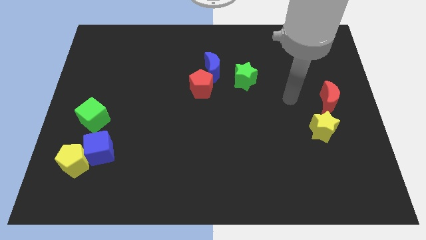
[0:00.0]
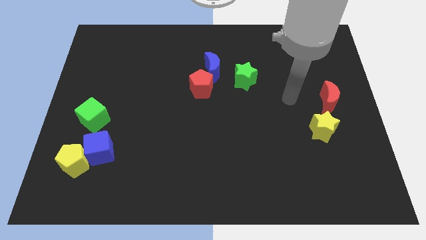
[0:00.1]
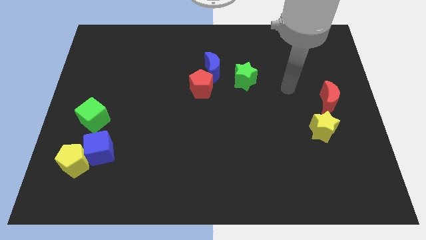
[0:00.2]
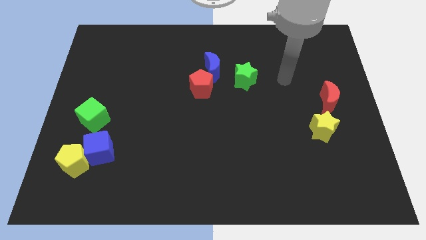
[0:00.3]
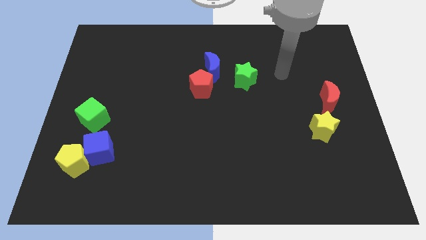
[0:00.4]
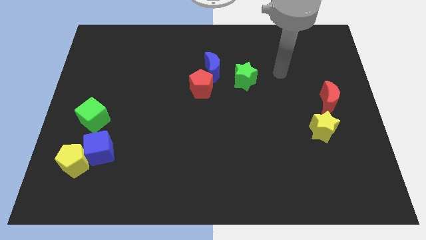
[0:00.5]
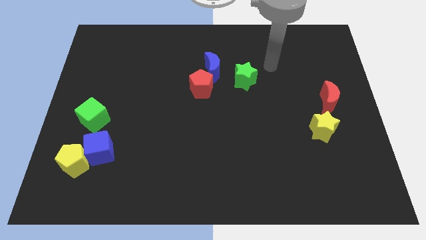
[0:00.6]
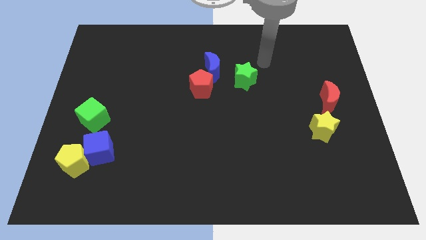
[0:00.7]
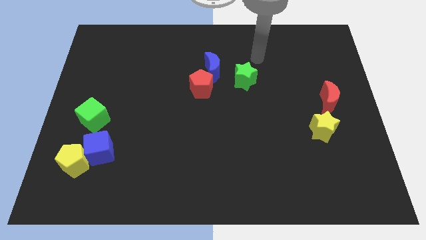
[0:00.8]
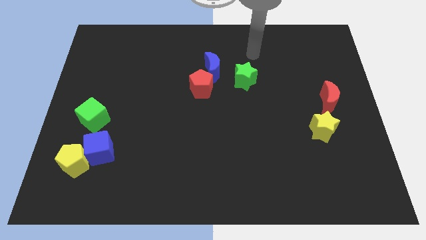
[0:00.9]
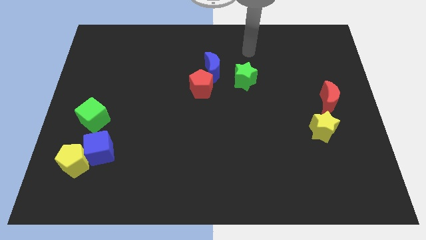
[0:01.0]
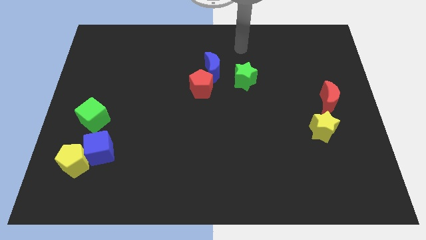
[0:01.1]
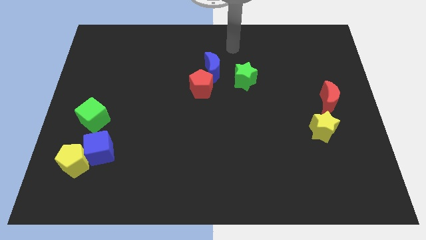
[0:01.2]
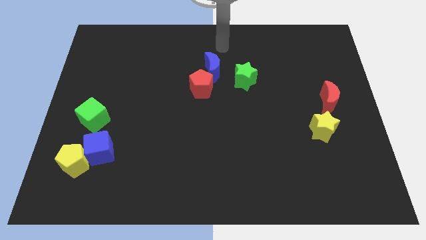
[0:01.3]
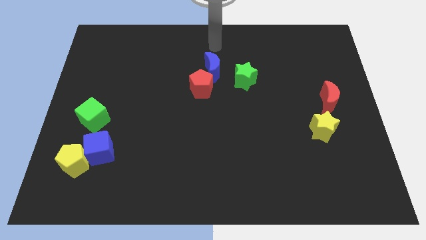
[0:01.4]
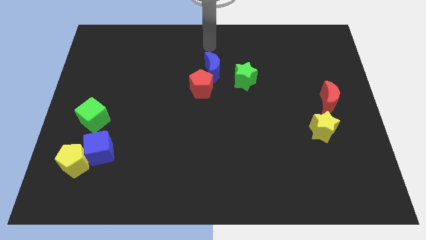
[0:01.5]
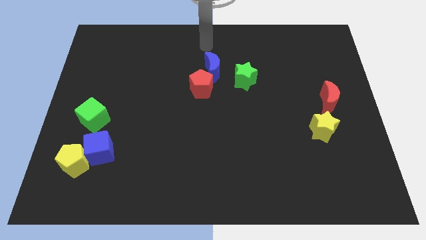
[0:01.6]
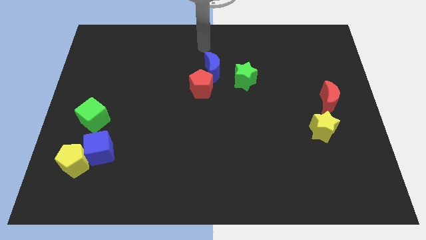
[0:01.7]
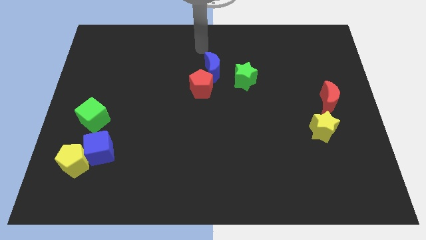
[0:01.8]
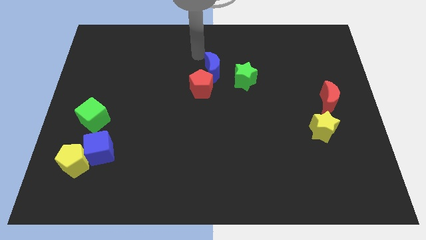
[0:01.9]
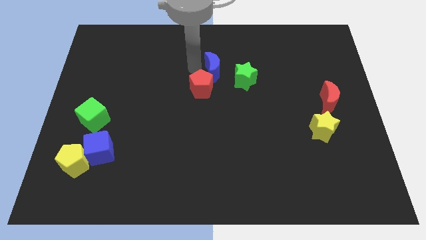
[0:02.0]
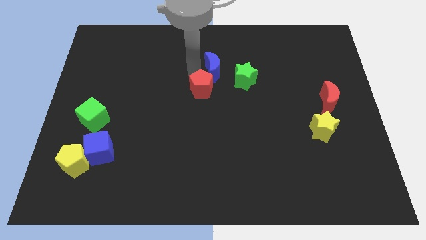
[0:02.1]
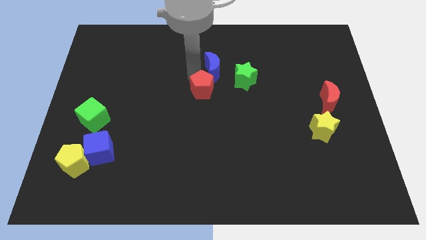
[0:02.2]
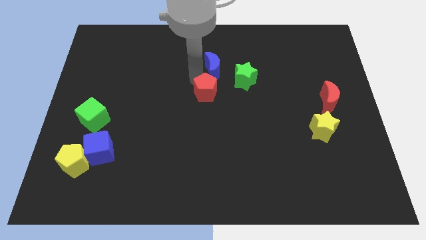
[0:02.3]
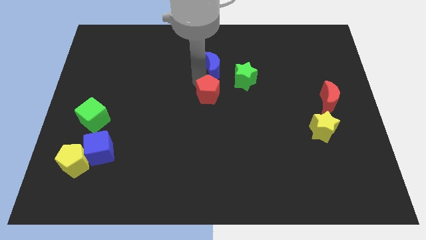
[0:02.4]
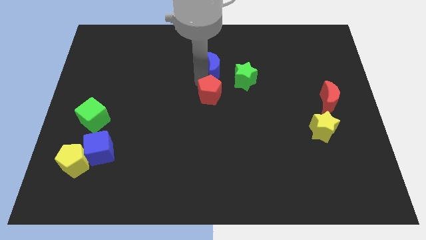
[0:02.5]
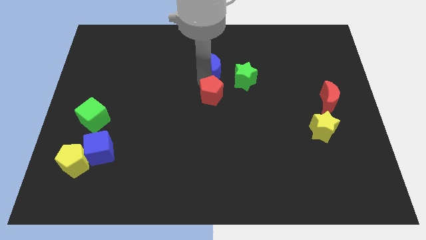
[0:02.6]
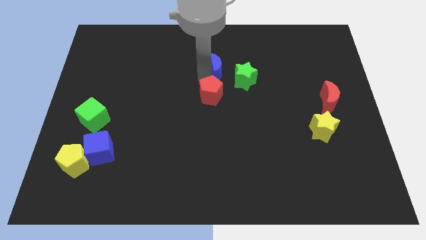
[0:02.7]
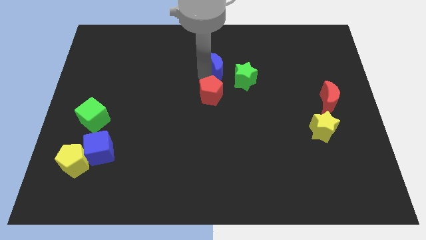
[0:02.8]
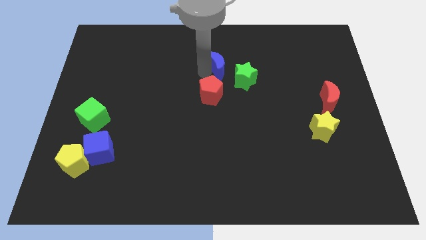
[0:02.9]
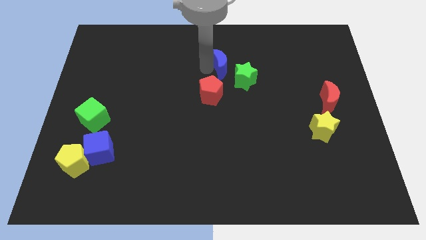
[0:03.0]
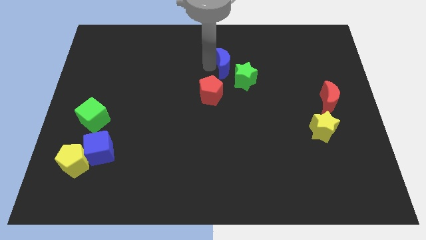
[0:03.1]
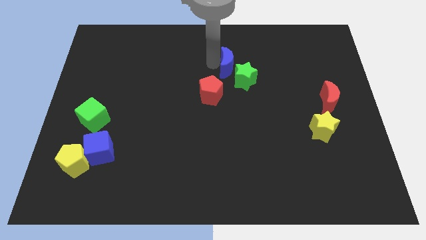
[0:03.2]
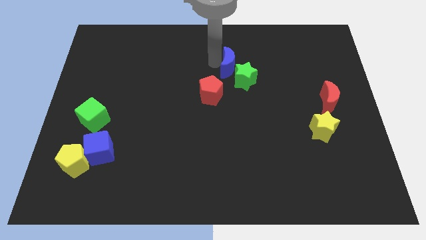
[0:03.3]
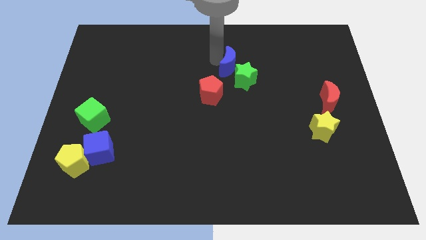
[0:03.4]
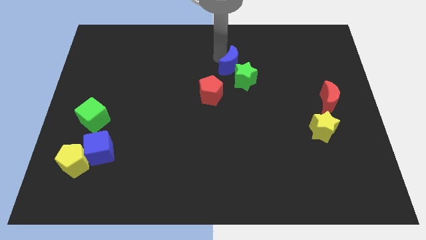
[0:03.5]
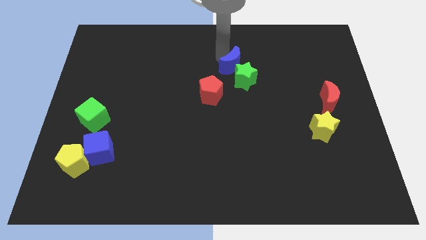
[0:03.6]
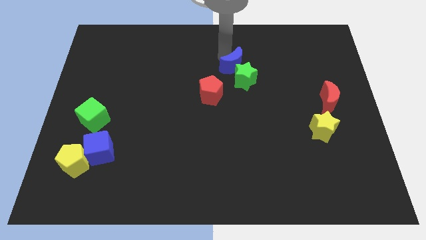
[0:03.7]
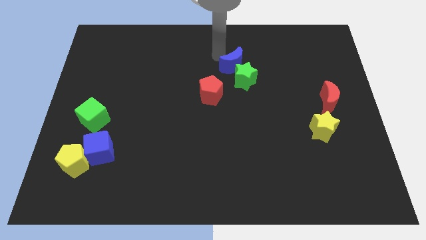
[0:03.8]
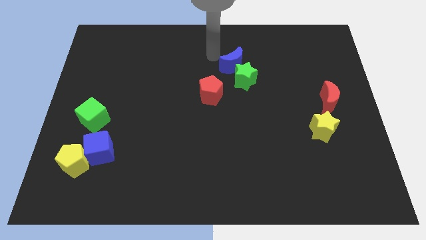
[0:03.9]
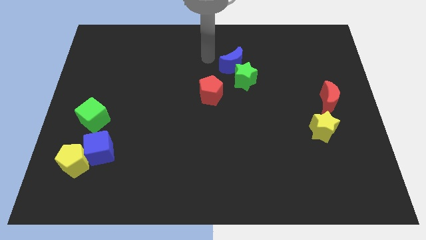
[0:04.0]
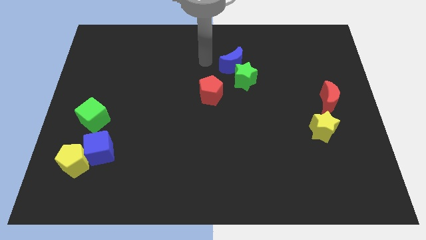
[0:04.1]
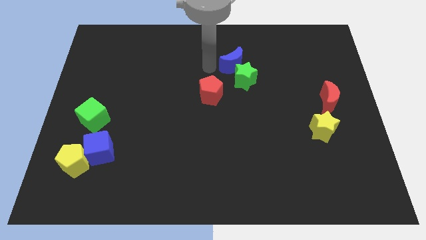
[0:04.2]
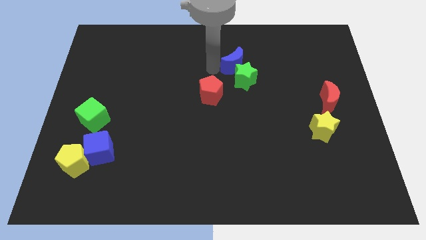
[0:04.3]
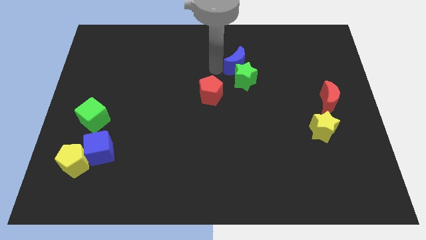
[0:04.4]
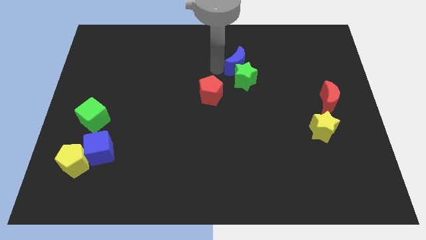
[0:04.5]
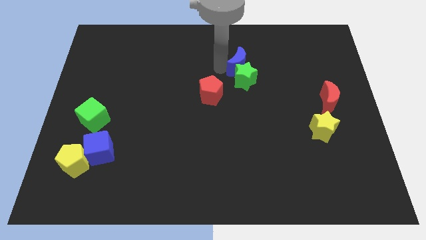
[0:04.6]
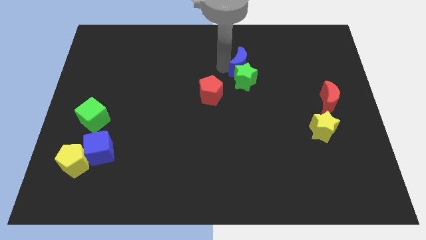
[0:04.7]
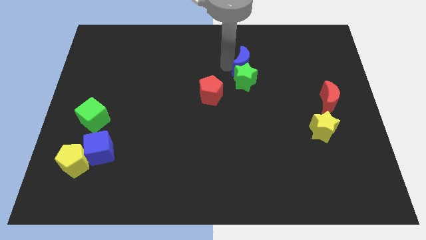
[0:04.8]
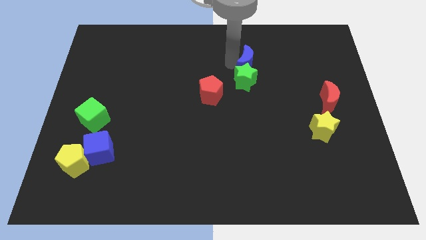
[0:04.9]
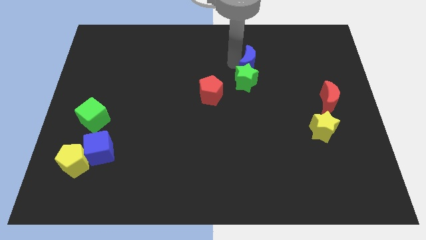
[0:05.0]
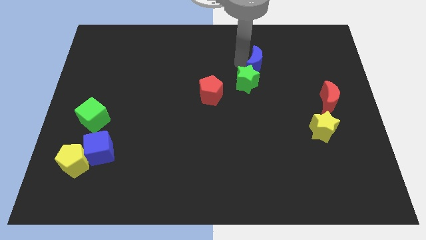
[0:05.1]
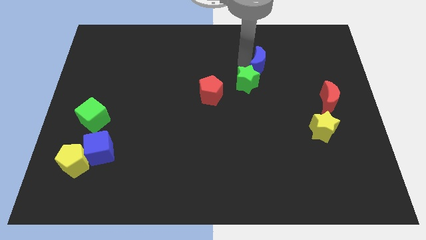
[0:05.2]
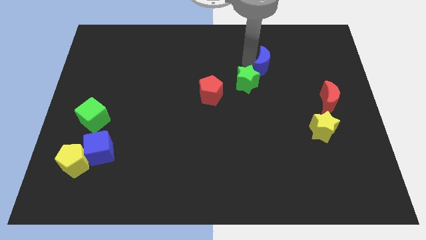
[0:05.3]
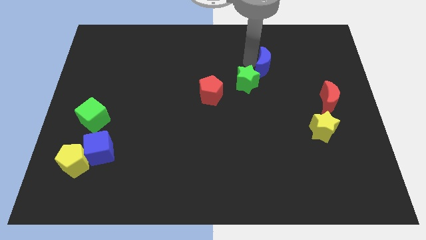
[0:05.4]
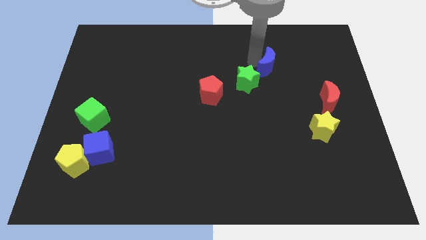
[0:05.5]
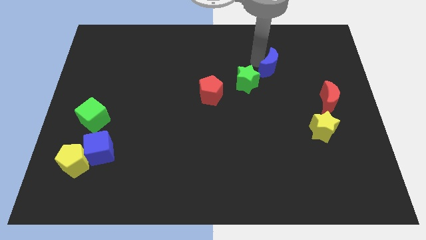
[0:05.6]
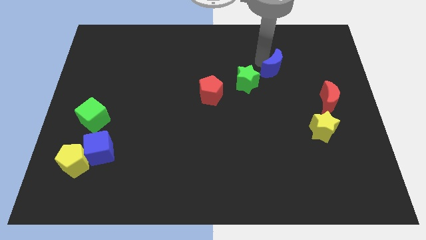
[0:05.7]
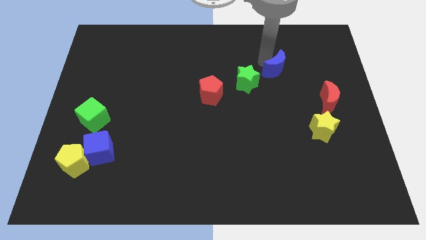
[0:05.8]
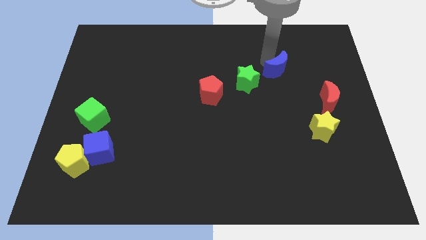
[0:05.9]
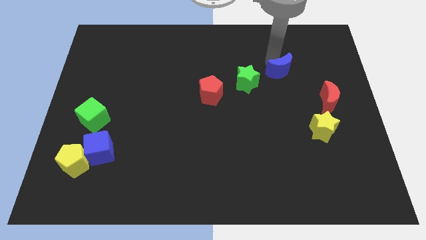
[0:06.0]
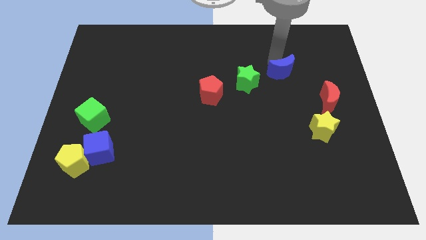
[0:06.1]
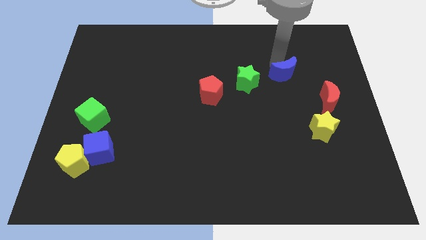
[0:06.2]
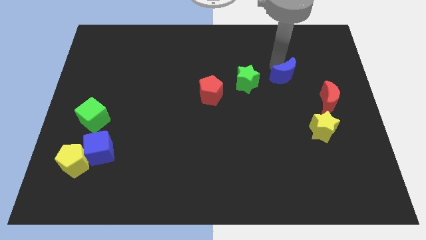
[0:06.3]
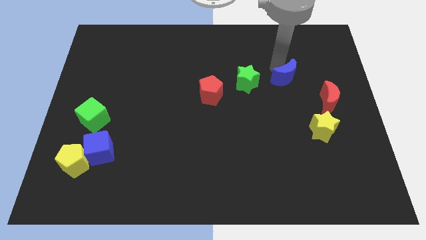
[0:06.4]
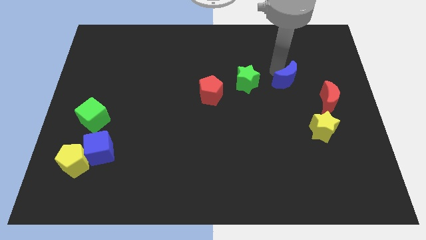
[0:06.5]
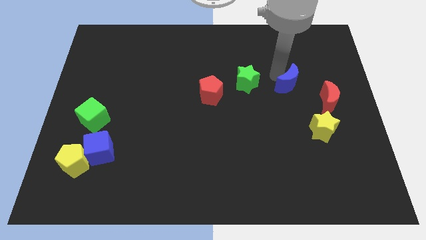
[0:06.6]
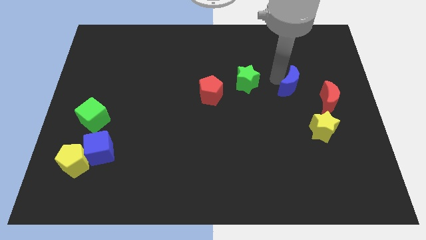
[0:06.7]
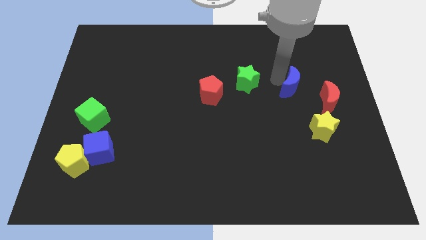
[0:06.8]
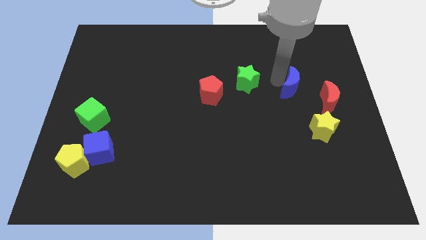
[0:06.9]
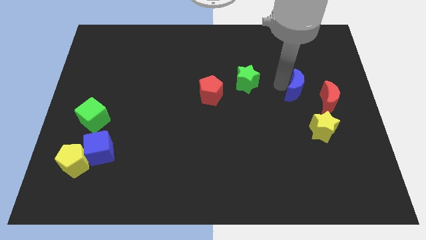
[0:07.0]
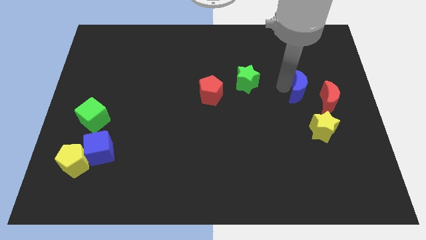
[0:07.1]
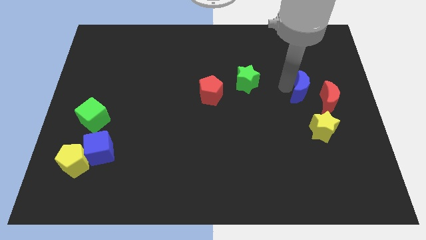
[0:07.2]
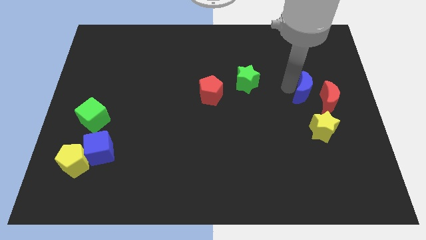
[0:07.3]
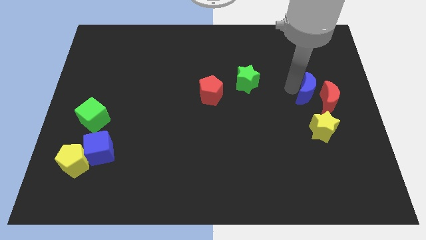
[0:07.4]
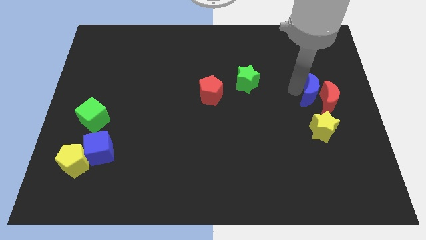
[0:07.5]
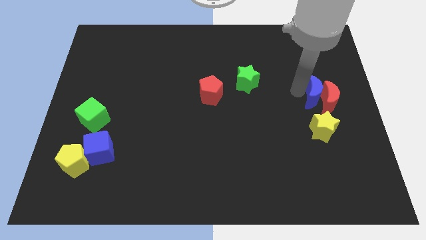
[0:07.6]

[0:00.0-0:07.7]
put the blue moon close to the red moon
